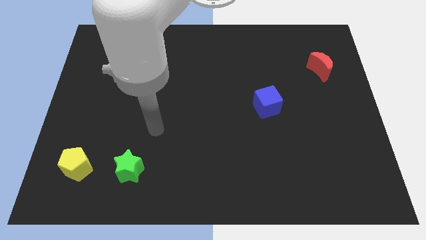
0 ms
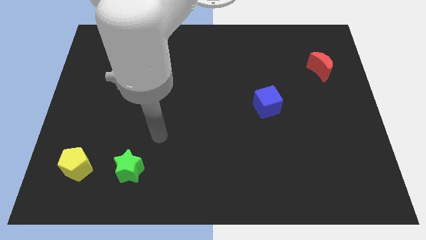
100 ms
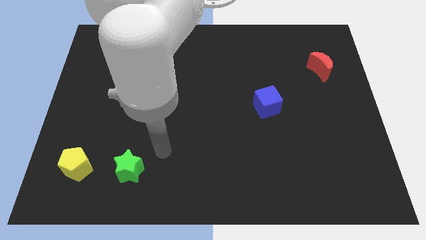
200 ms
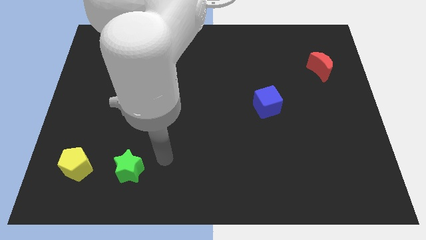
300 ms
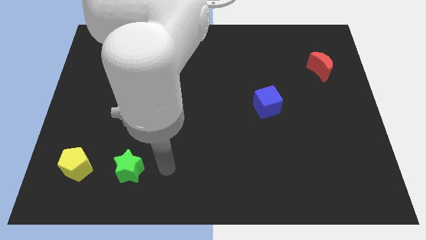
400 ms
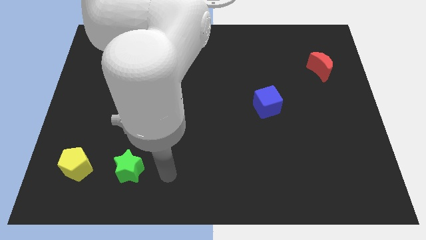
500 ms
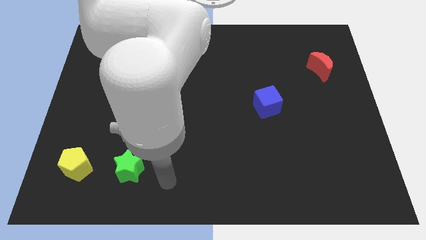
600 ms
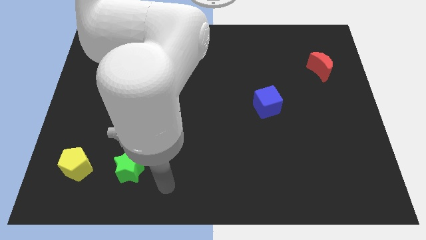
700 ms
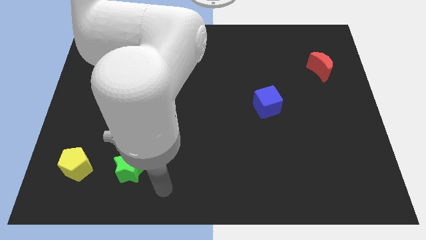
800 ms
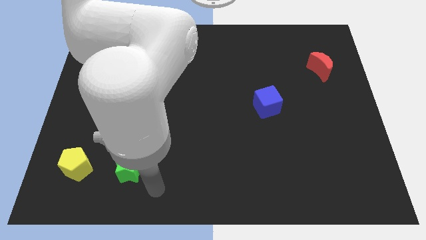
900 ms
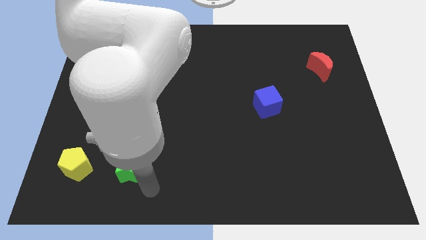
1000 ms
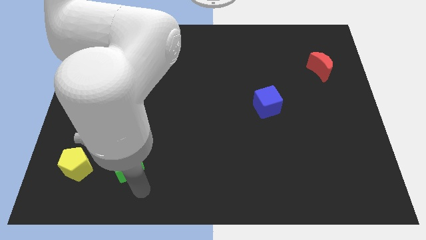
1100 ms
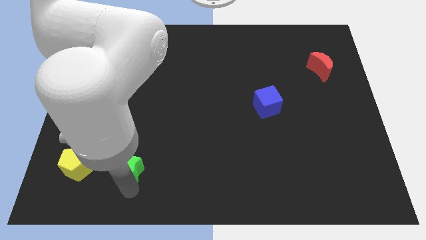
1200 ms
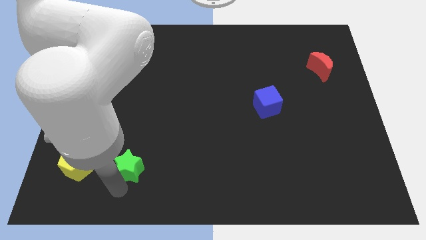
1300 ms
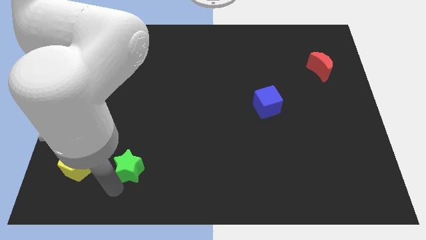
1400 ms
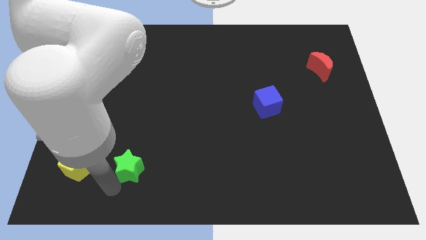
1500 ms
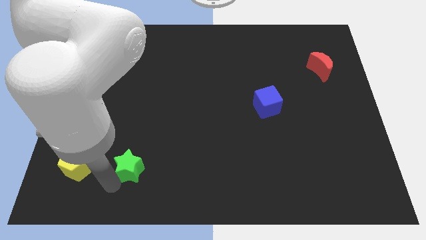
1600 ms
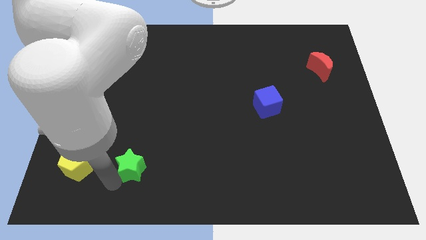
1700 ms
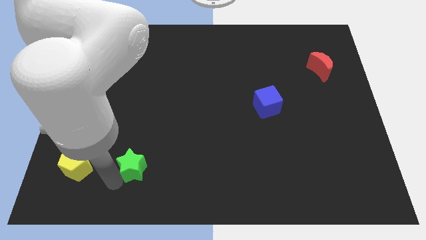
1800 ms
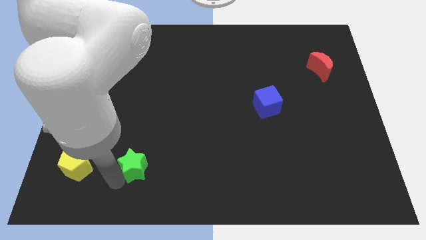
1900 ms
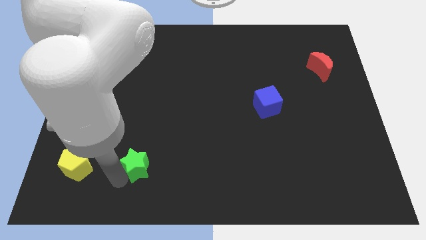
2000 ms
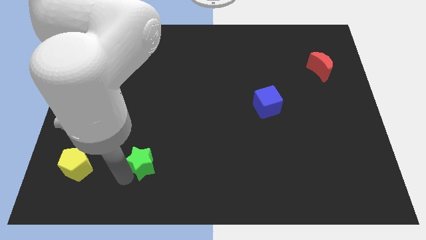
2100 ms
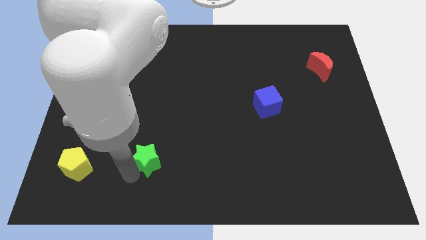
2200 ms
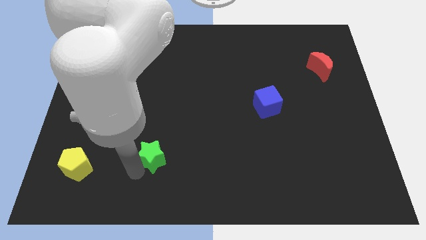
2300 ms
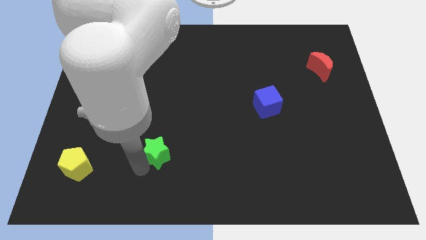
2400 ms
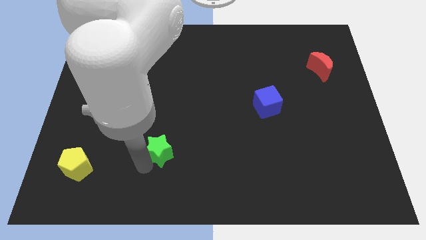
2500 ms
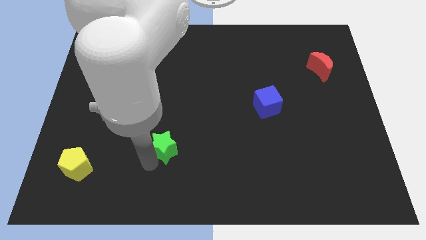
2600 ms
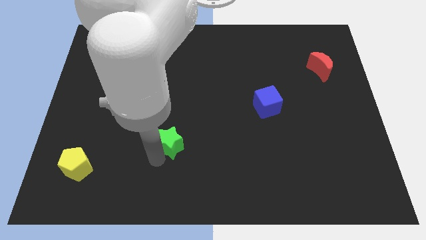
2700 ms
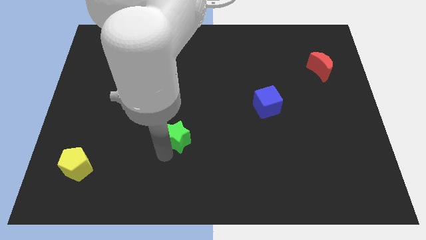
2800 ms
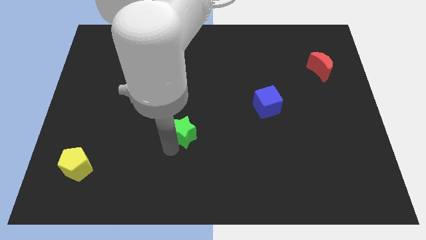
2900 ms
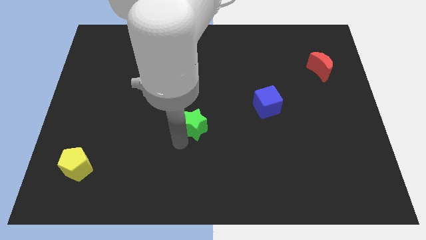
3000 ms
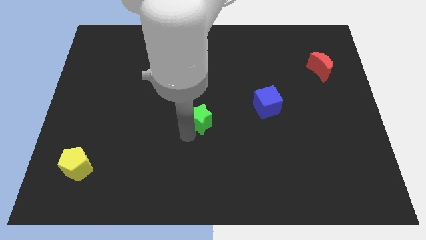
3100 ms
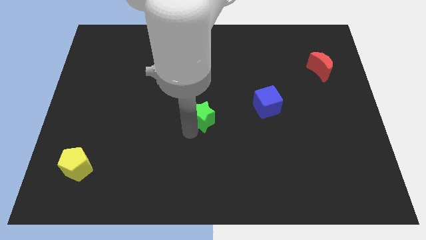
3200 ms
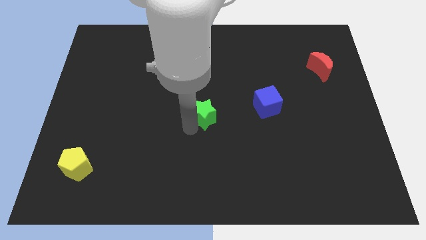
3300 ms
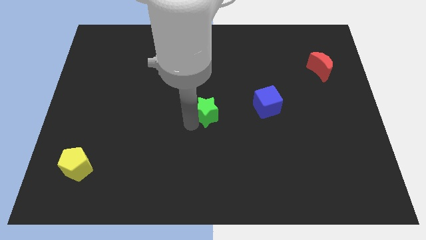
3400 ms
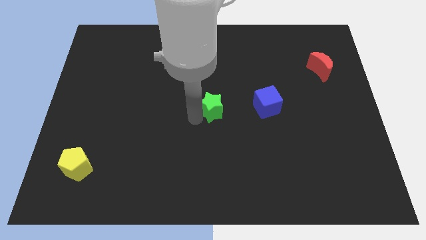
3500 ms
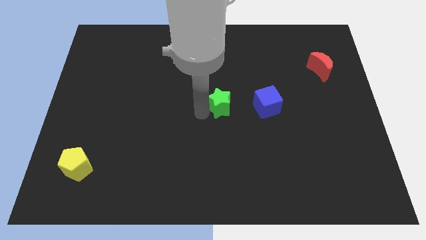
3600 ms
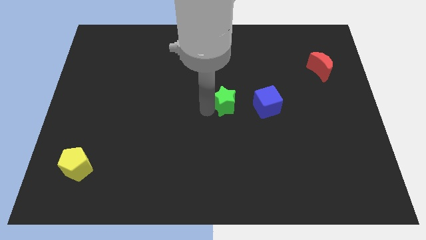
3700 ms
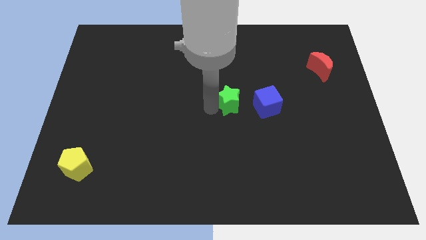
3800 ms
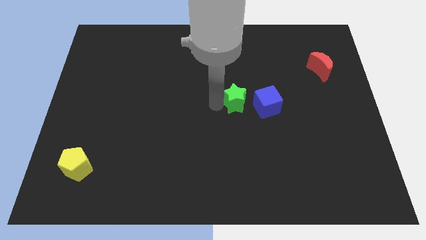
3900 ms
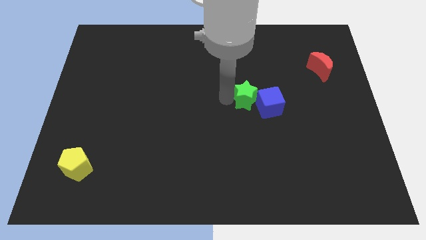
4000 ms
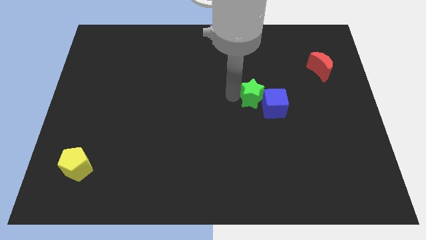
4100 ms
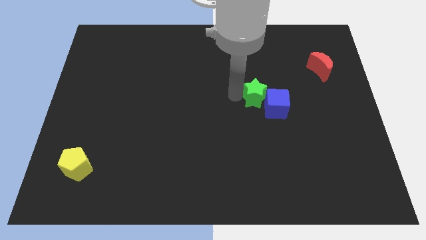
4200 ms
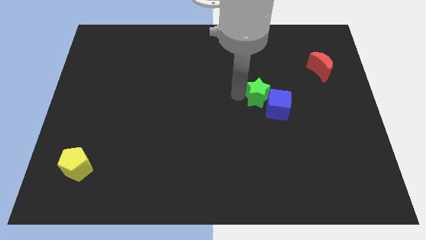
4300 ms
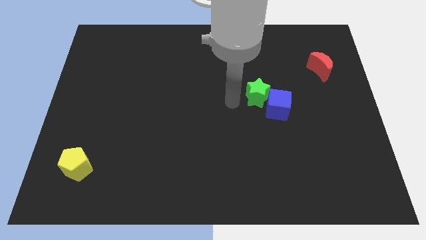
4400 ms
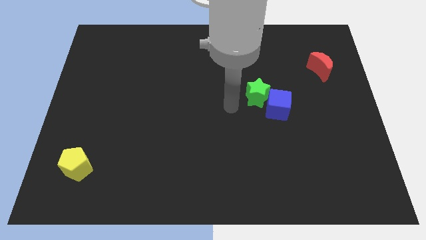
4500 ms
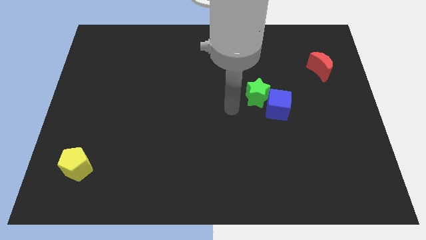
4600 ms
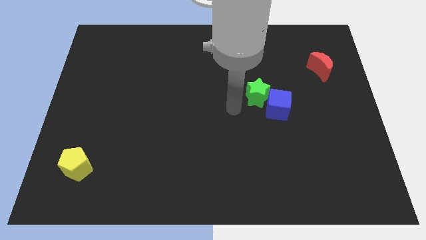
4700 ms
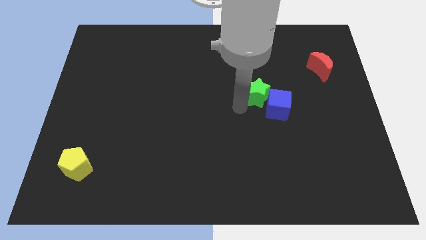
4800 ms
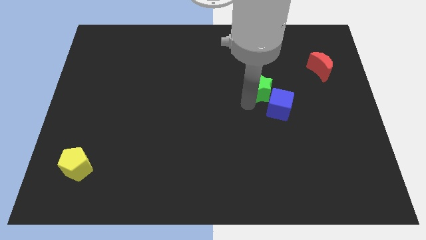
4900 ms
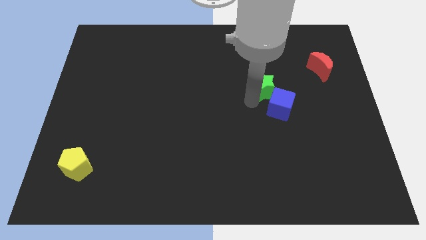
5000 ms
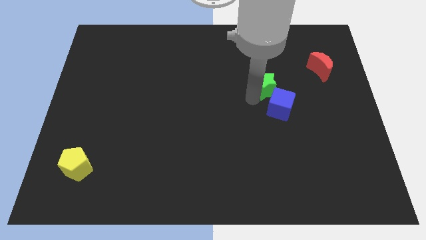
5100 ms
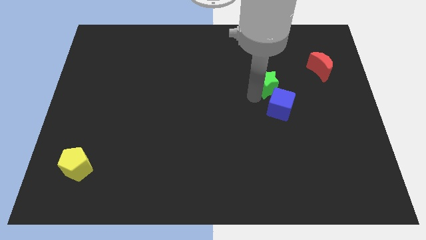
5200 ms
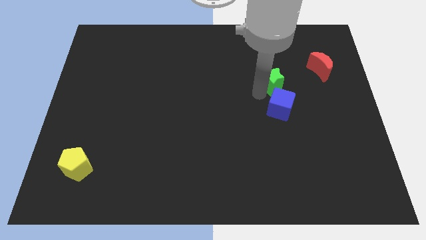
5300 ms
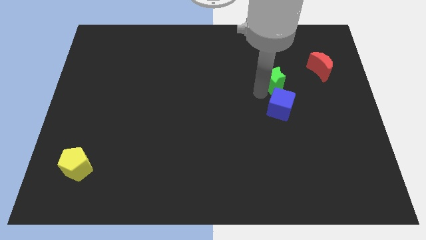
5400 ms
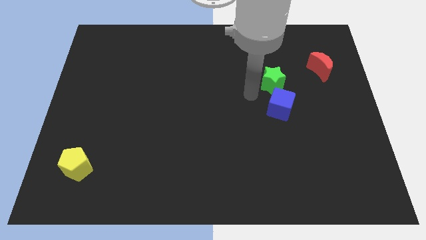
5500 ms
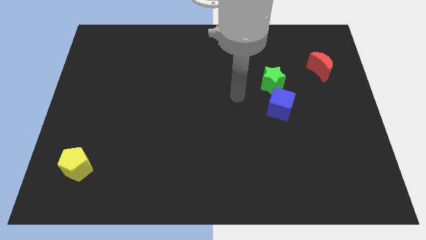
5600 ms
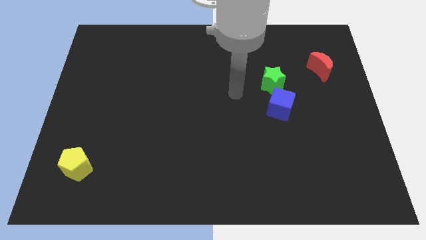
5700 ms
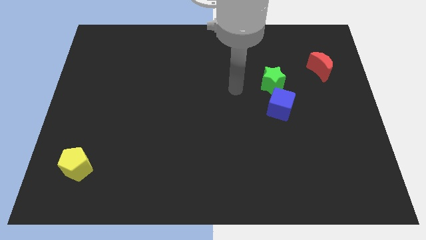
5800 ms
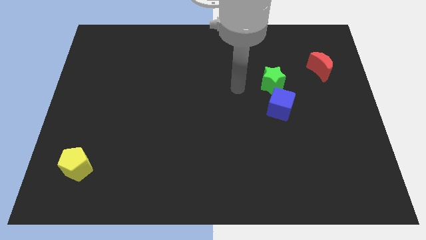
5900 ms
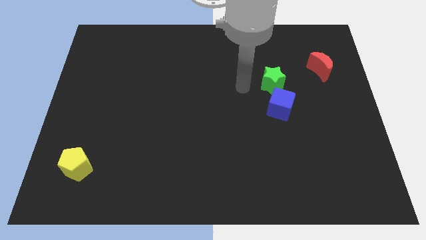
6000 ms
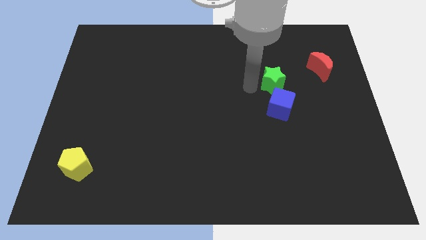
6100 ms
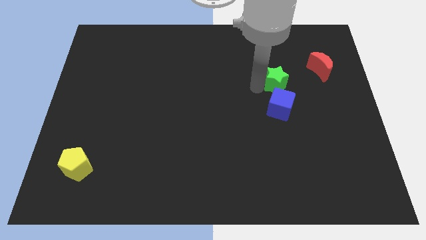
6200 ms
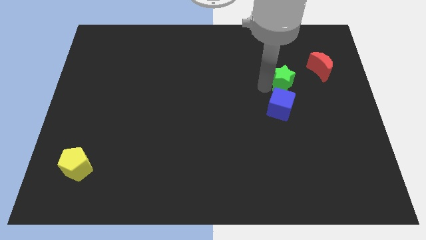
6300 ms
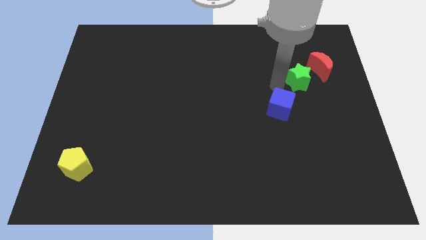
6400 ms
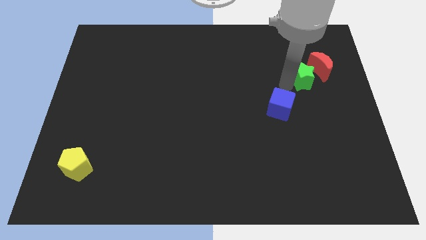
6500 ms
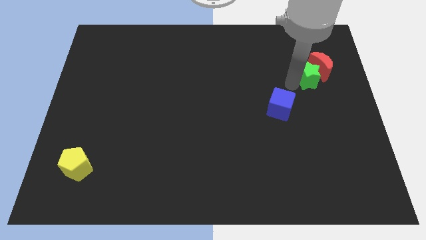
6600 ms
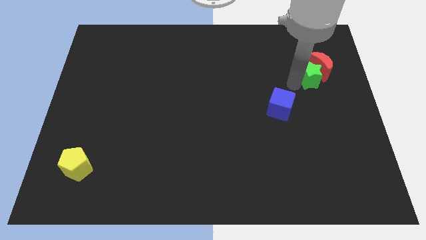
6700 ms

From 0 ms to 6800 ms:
push the green block to the moon

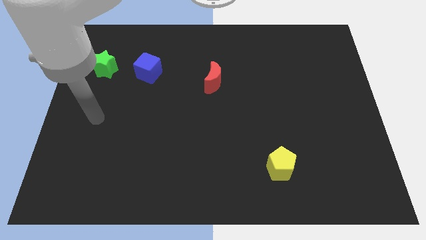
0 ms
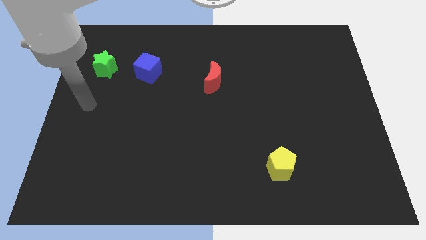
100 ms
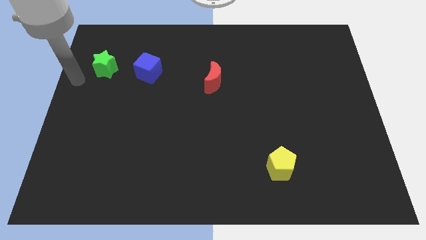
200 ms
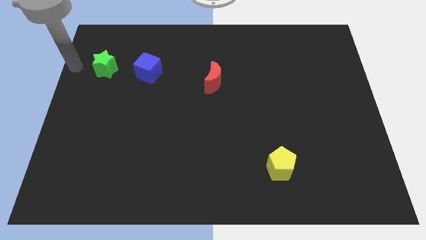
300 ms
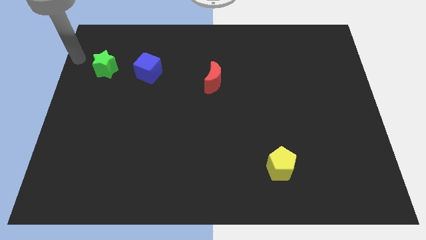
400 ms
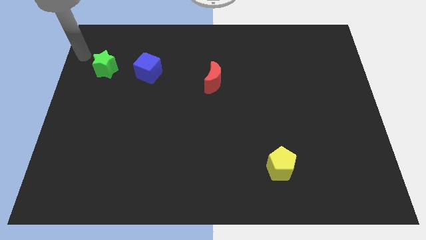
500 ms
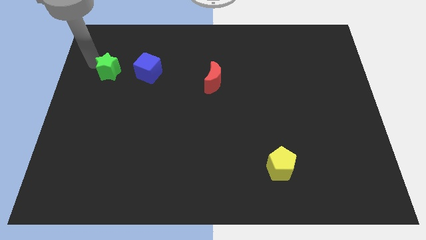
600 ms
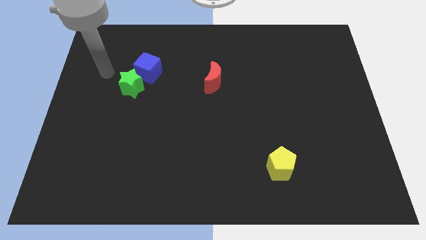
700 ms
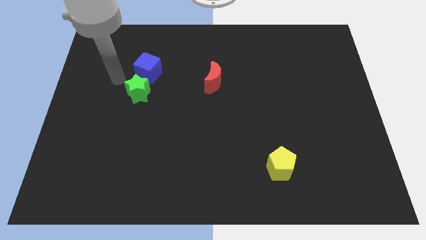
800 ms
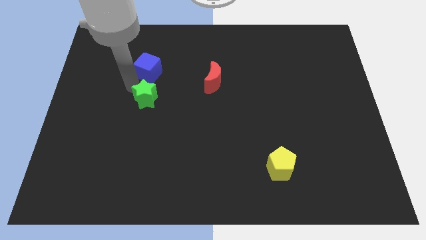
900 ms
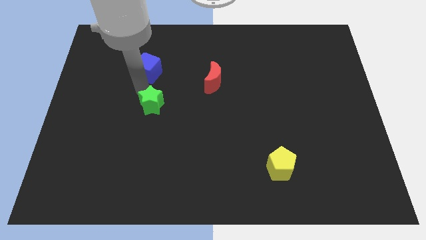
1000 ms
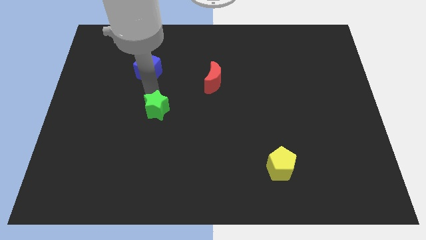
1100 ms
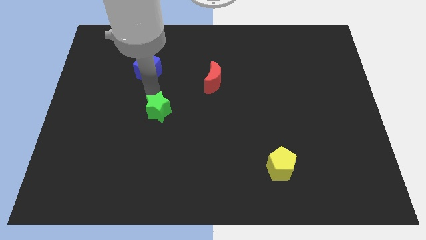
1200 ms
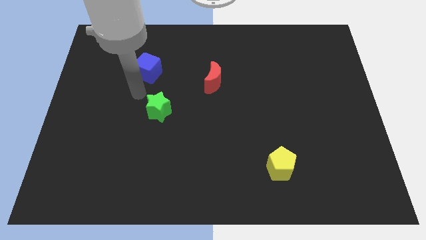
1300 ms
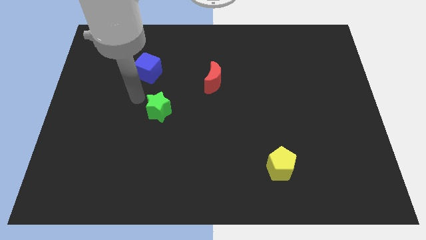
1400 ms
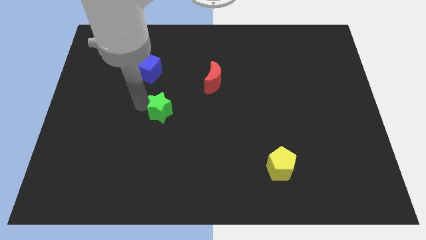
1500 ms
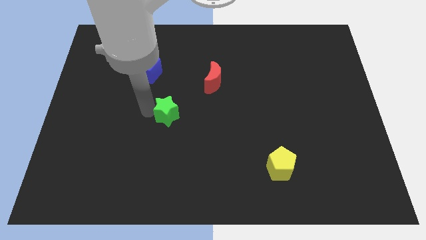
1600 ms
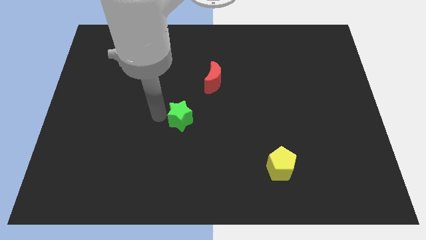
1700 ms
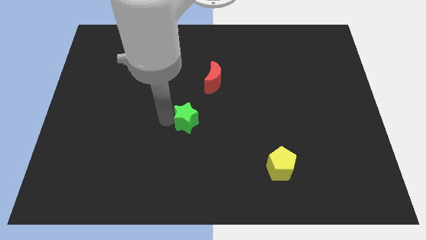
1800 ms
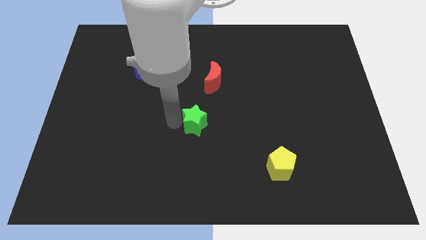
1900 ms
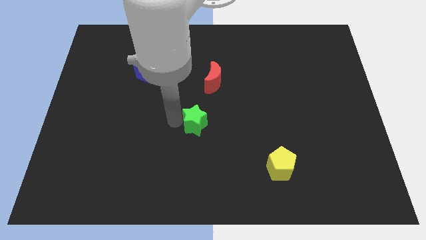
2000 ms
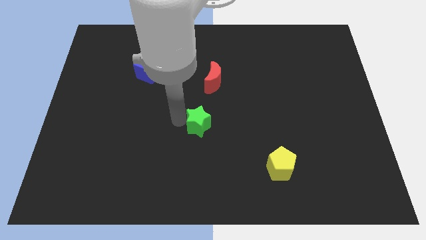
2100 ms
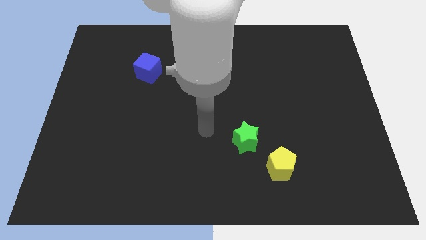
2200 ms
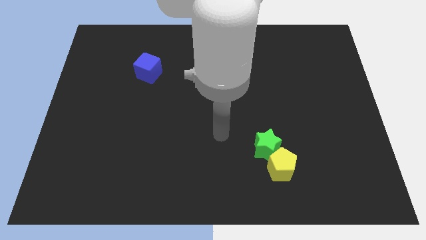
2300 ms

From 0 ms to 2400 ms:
push the star to the yellow pentagon
